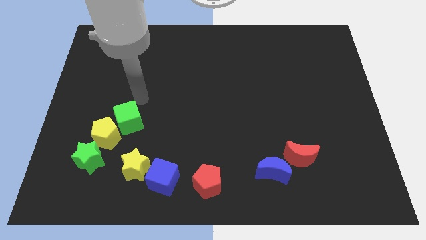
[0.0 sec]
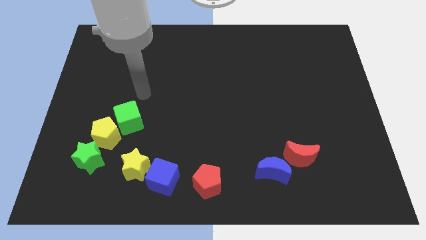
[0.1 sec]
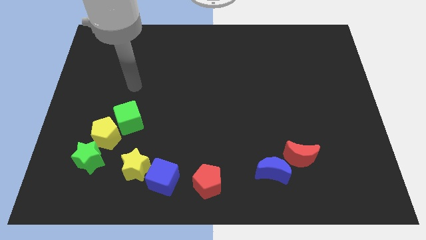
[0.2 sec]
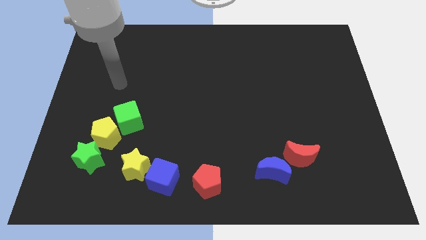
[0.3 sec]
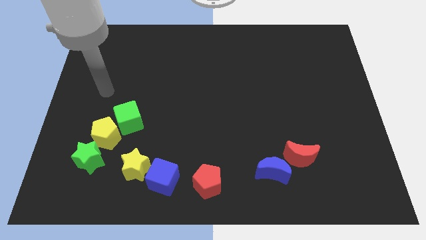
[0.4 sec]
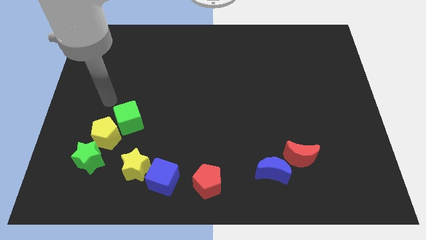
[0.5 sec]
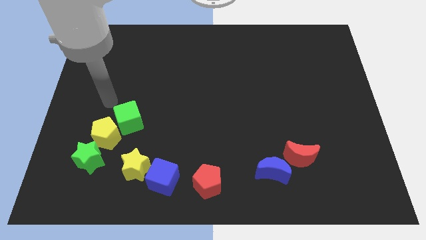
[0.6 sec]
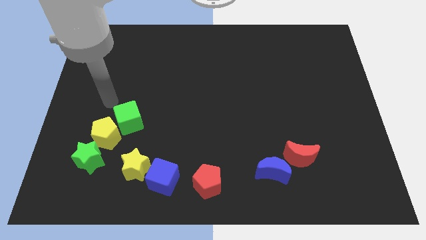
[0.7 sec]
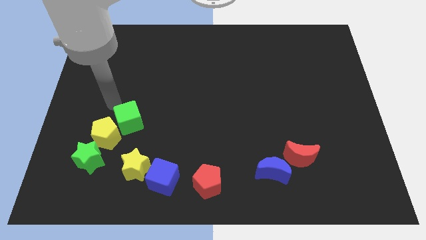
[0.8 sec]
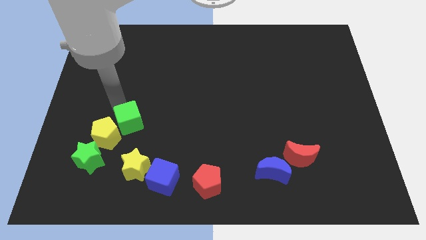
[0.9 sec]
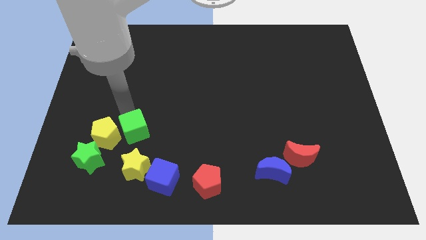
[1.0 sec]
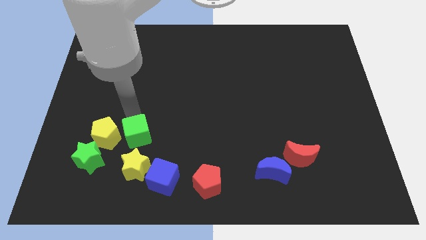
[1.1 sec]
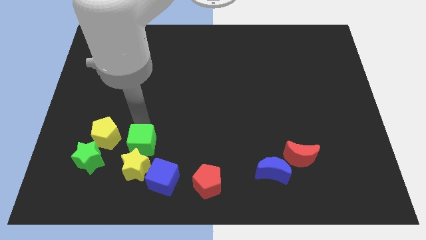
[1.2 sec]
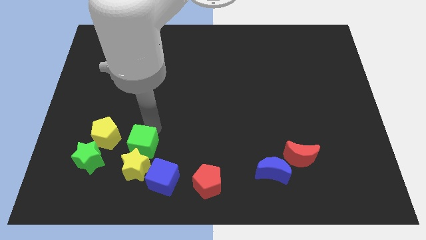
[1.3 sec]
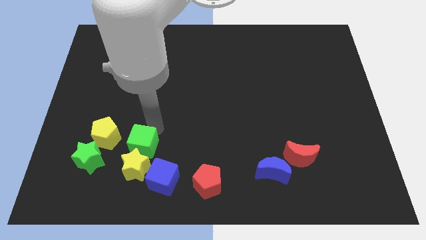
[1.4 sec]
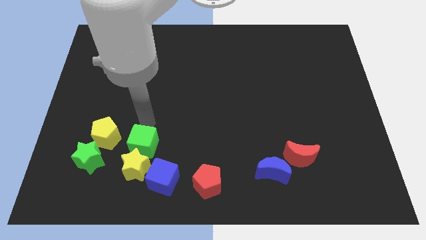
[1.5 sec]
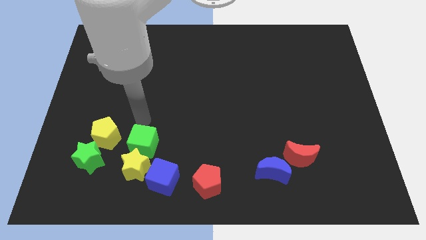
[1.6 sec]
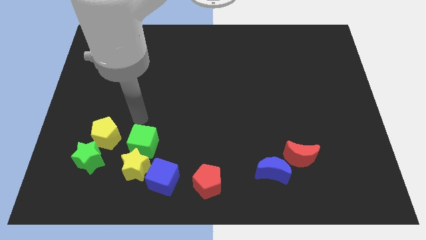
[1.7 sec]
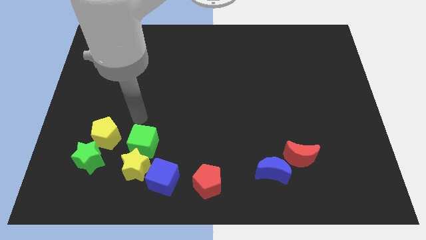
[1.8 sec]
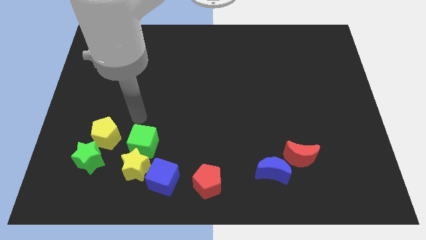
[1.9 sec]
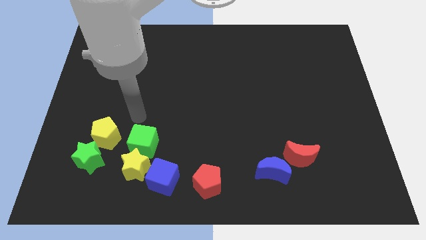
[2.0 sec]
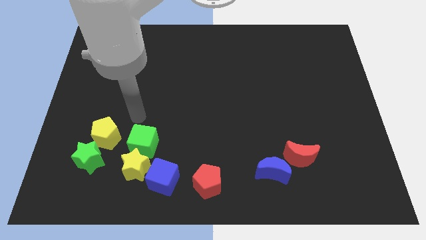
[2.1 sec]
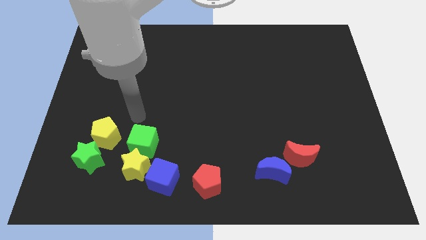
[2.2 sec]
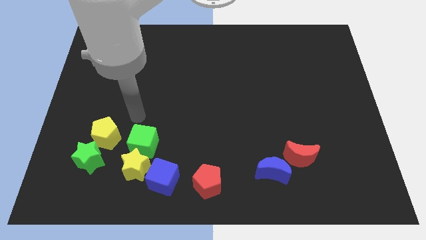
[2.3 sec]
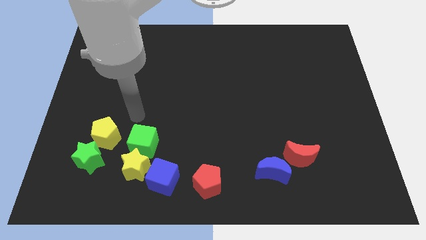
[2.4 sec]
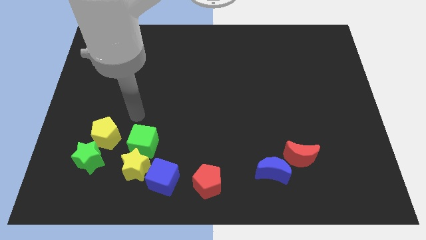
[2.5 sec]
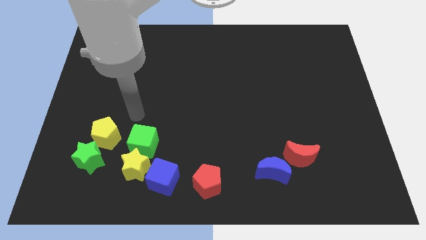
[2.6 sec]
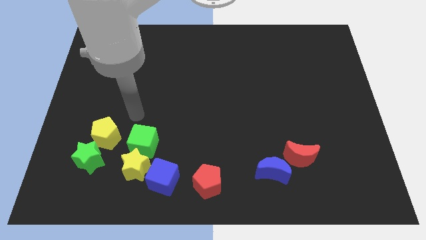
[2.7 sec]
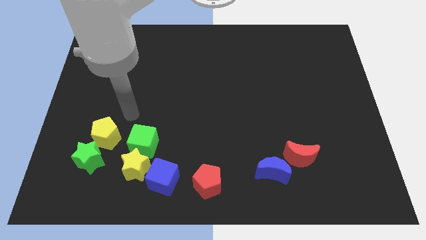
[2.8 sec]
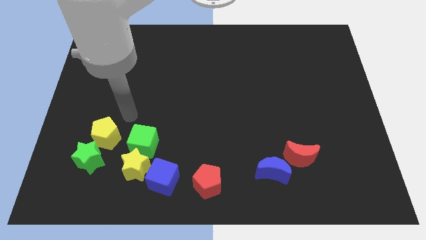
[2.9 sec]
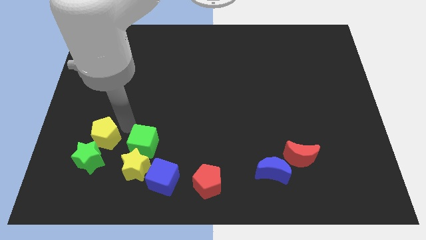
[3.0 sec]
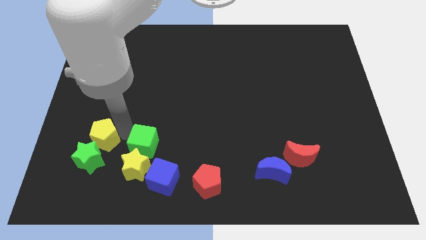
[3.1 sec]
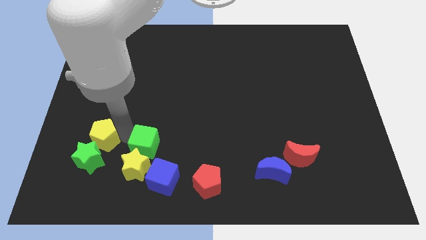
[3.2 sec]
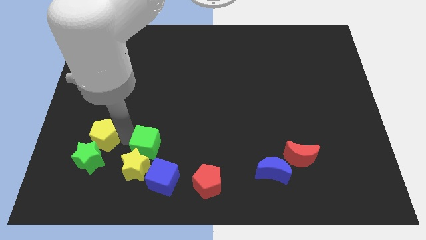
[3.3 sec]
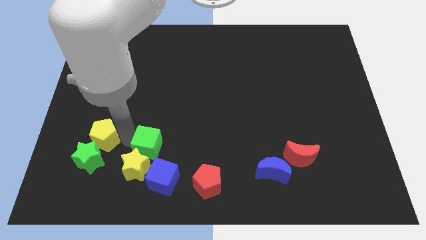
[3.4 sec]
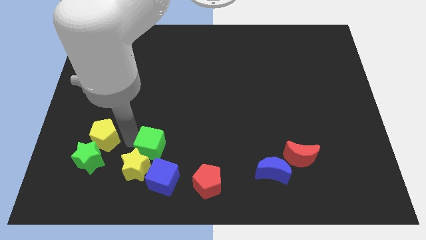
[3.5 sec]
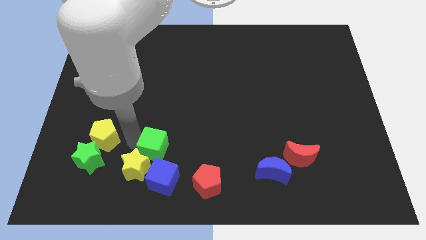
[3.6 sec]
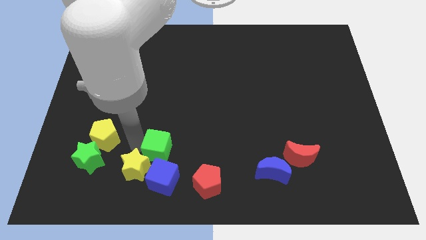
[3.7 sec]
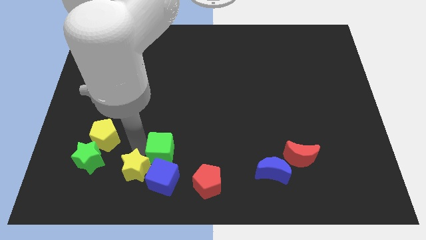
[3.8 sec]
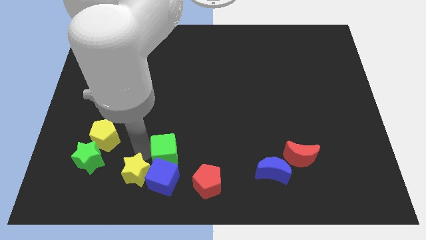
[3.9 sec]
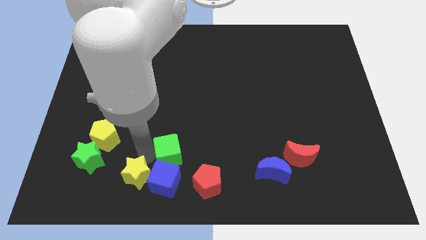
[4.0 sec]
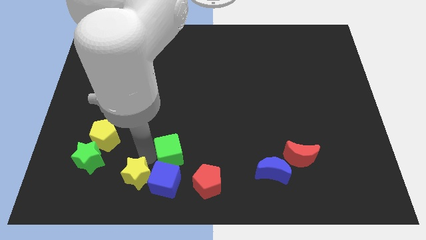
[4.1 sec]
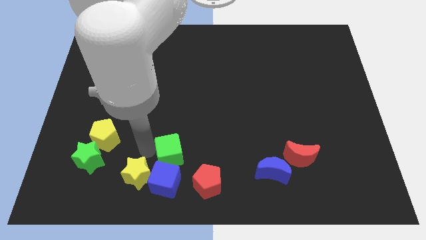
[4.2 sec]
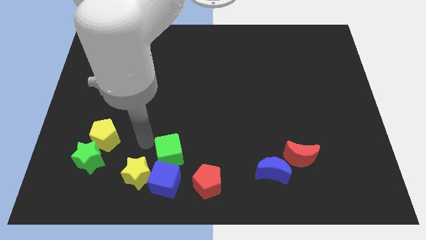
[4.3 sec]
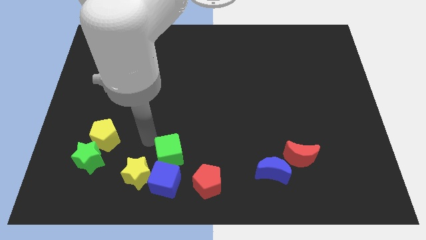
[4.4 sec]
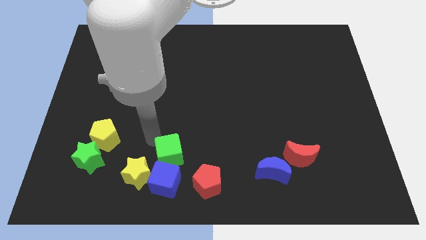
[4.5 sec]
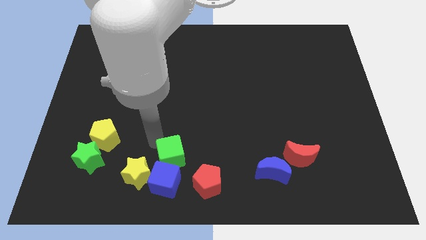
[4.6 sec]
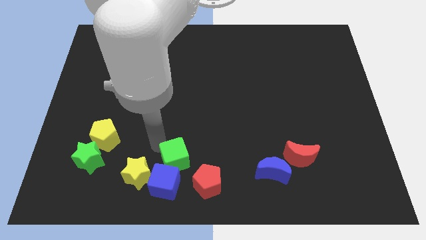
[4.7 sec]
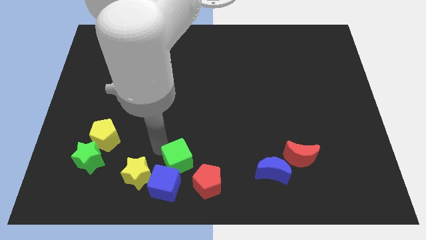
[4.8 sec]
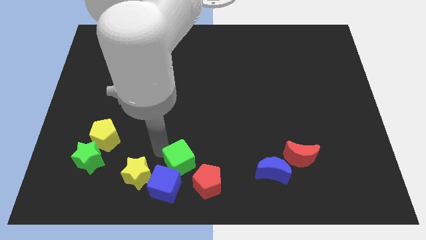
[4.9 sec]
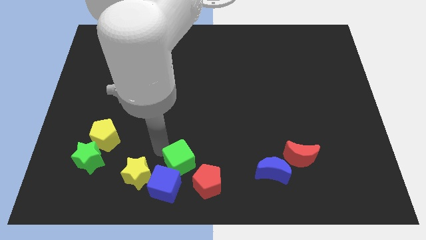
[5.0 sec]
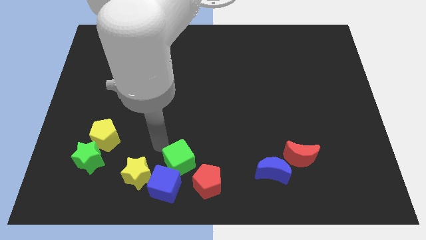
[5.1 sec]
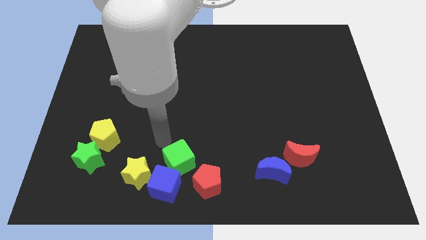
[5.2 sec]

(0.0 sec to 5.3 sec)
push the green cube into blue cube

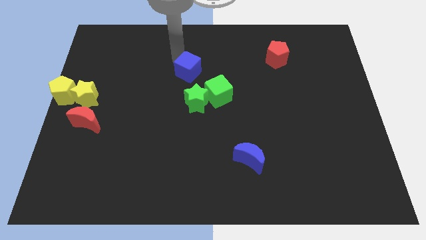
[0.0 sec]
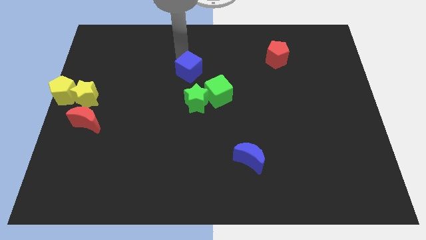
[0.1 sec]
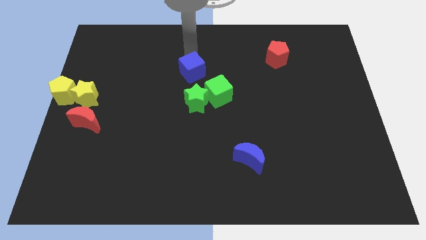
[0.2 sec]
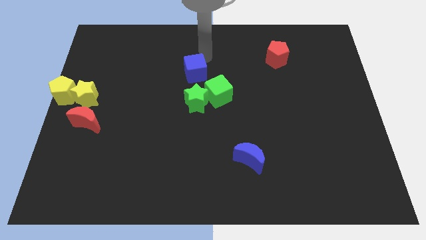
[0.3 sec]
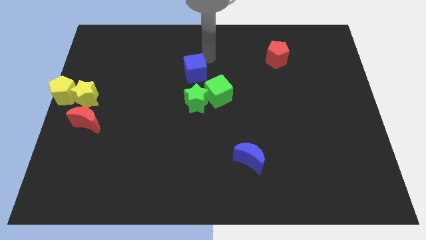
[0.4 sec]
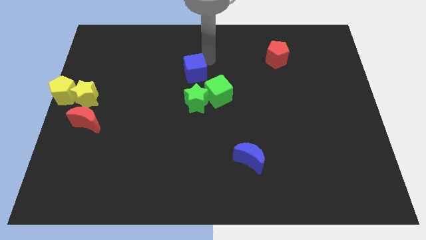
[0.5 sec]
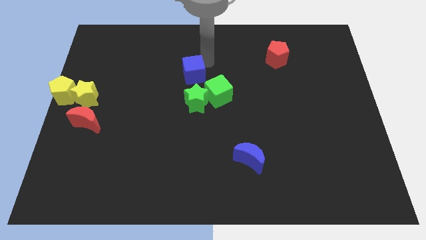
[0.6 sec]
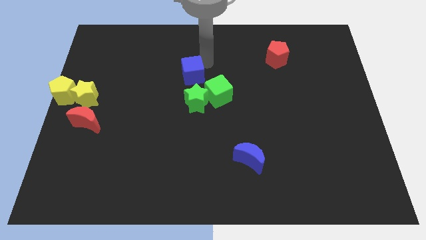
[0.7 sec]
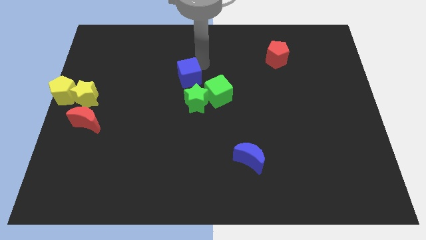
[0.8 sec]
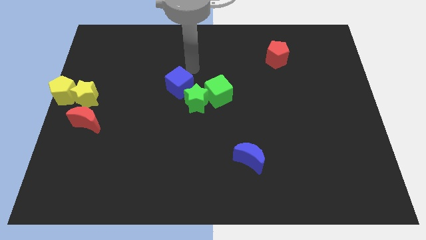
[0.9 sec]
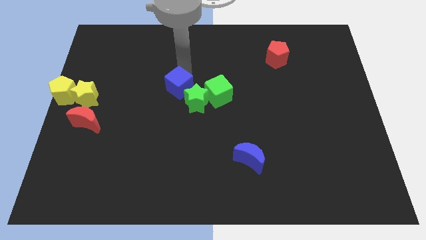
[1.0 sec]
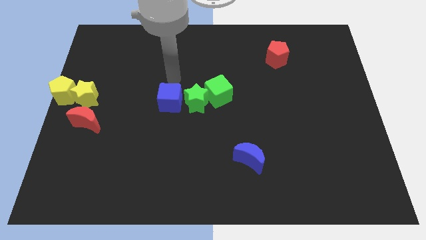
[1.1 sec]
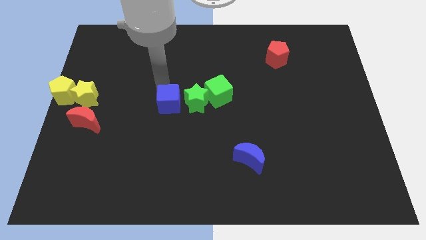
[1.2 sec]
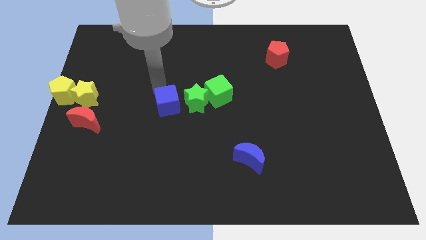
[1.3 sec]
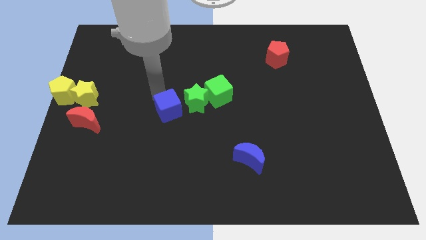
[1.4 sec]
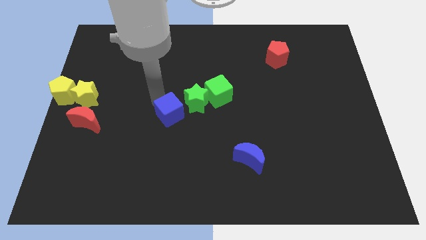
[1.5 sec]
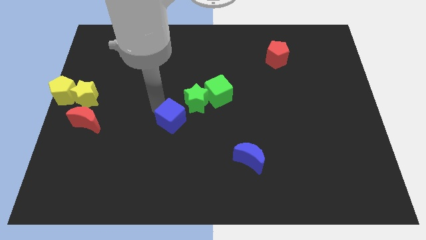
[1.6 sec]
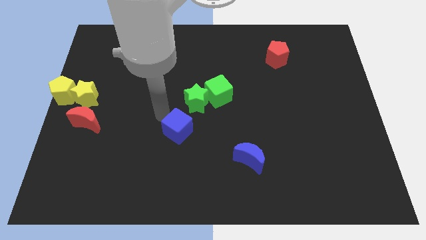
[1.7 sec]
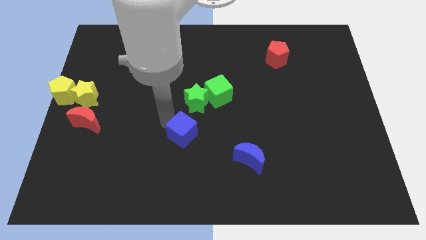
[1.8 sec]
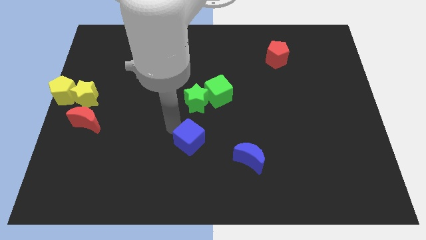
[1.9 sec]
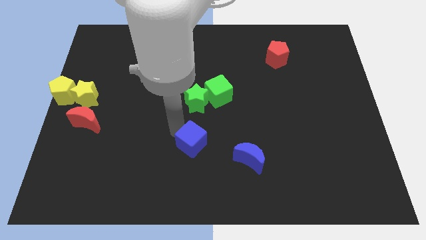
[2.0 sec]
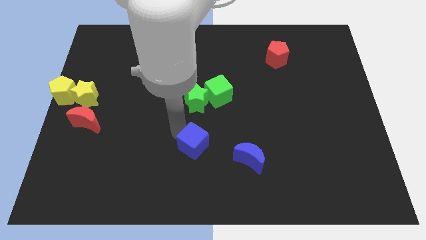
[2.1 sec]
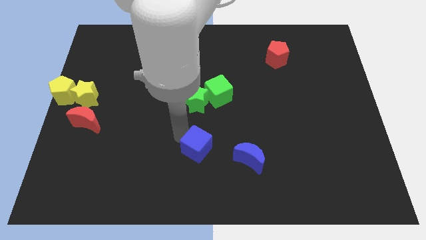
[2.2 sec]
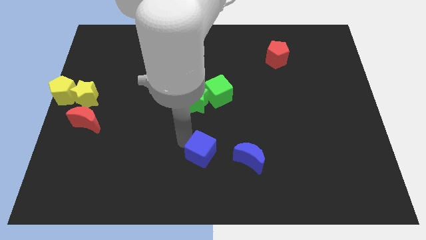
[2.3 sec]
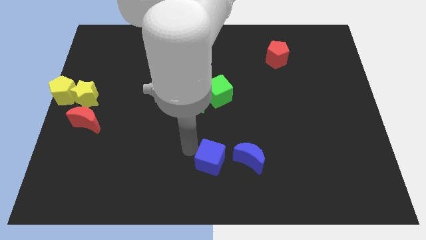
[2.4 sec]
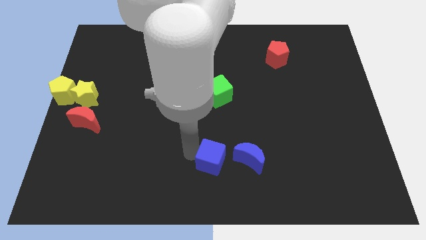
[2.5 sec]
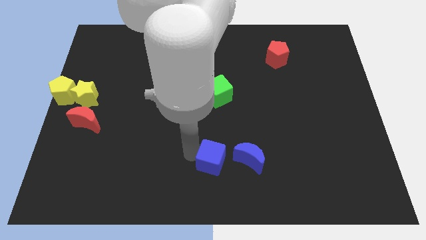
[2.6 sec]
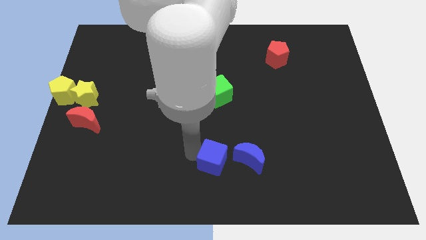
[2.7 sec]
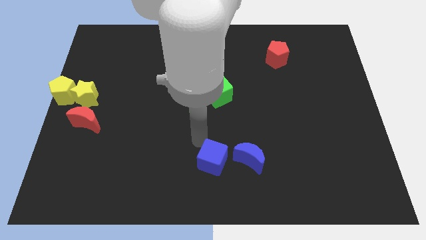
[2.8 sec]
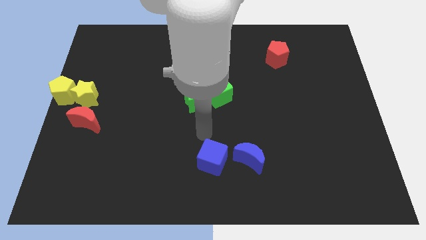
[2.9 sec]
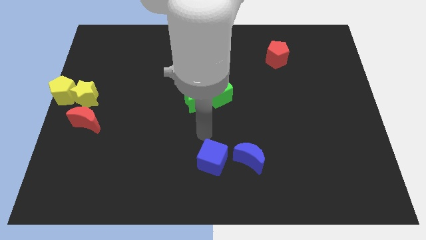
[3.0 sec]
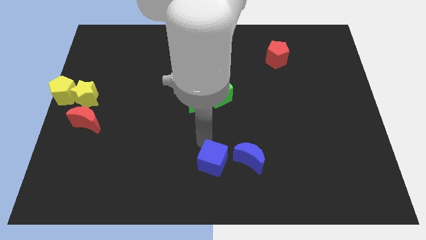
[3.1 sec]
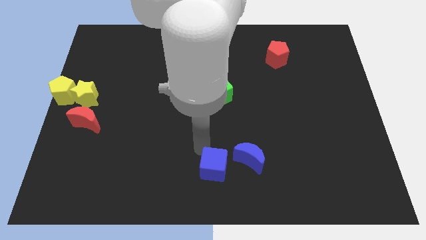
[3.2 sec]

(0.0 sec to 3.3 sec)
move the blue cube to the left of blue moon

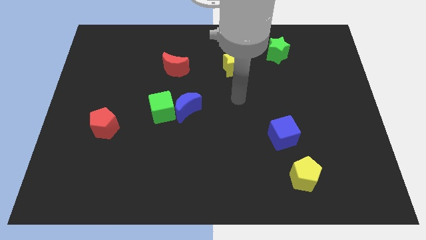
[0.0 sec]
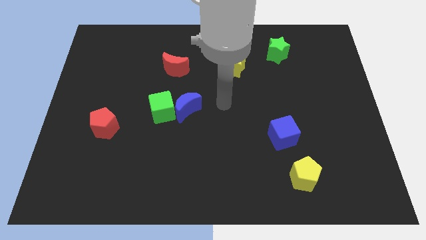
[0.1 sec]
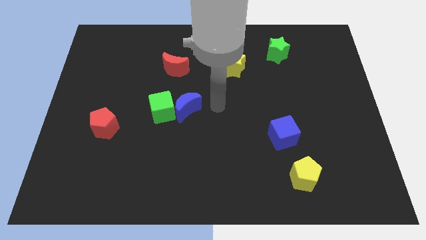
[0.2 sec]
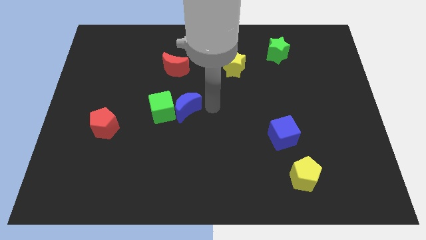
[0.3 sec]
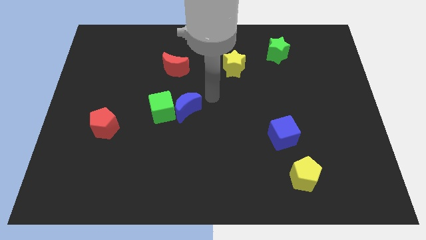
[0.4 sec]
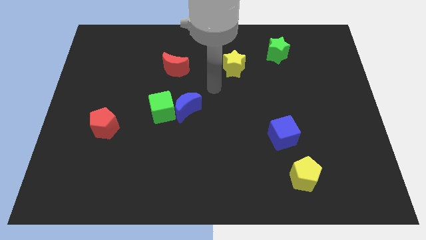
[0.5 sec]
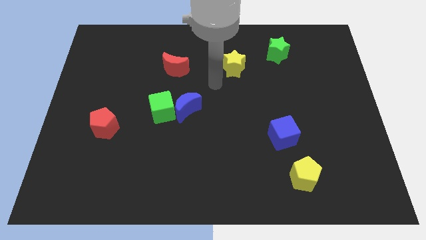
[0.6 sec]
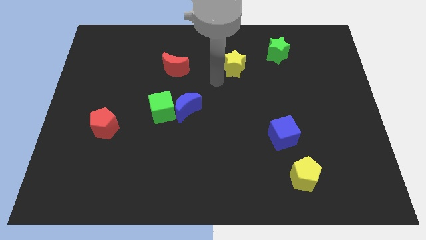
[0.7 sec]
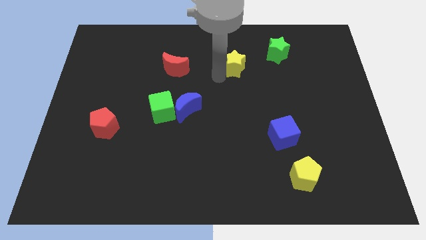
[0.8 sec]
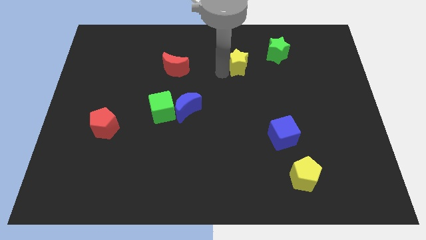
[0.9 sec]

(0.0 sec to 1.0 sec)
move yellow star slightly to top right
